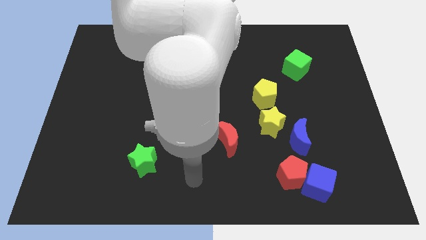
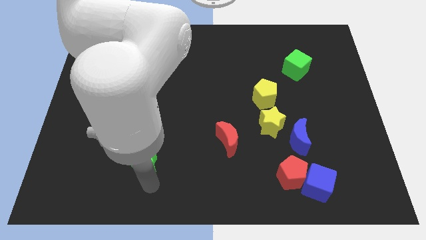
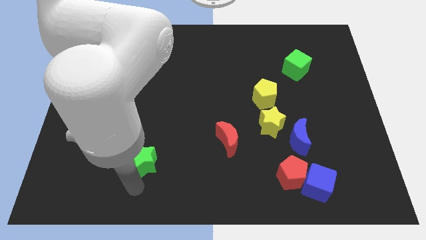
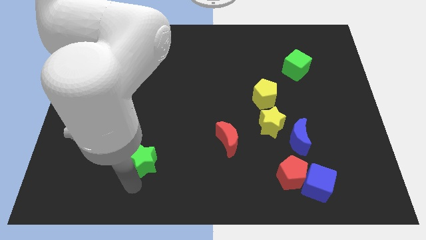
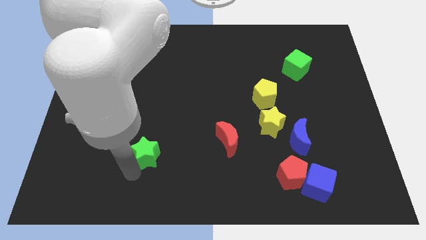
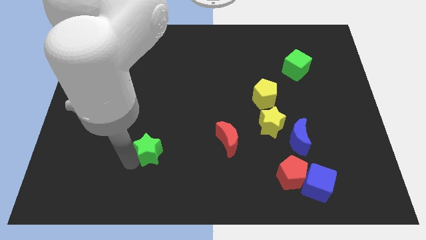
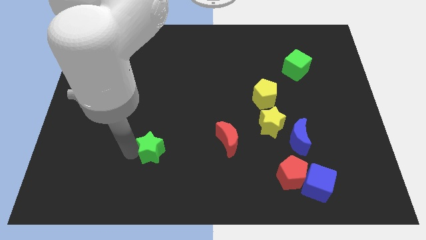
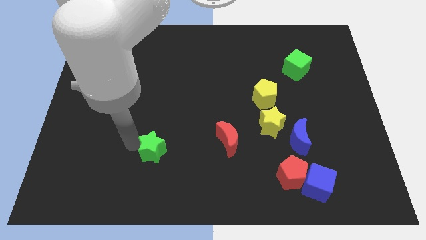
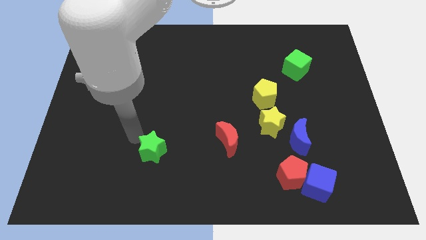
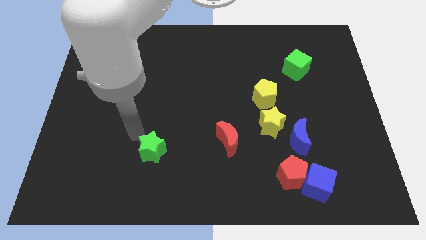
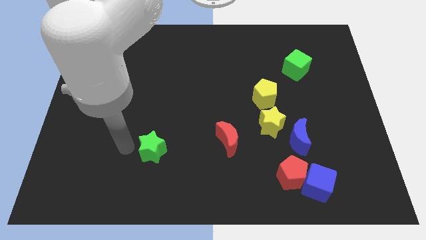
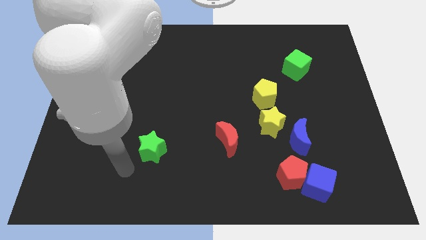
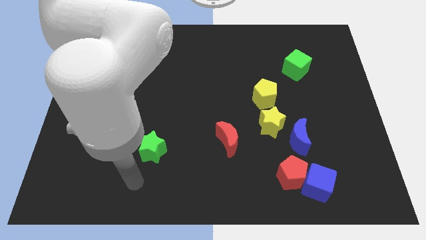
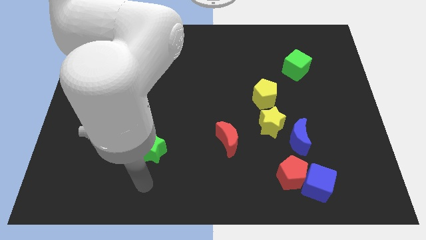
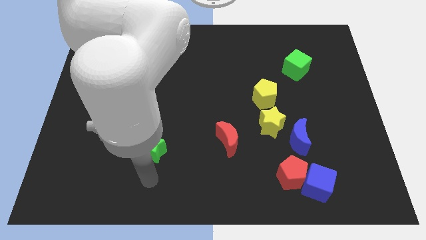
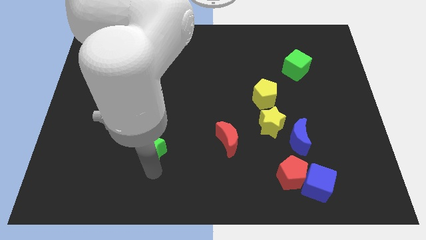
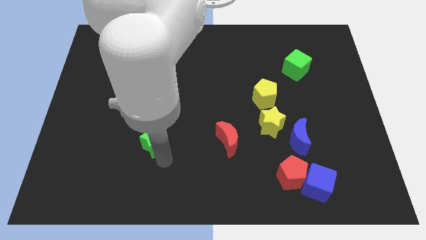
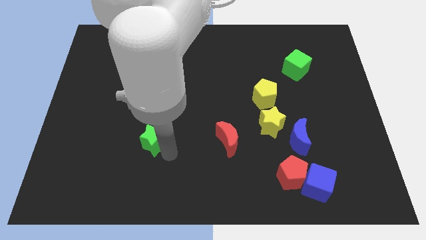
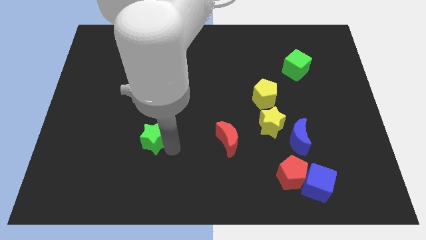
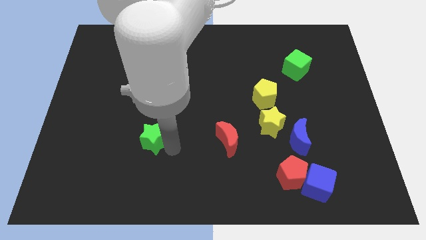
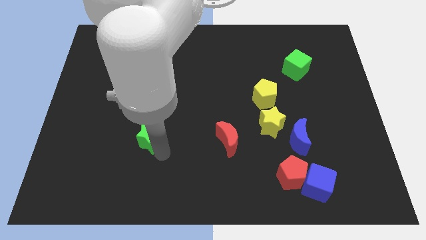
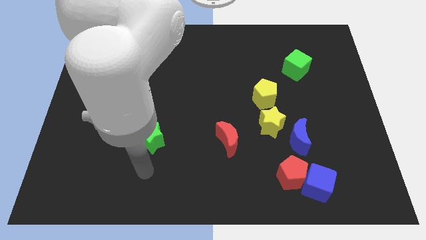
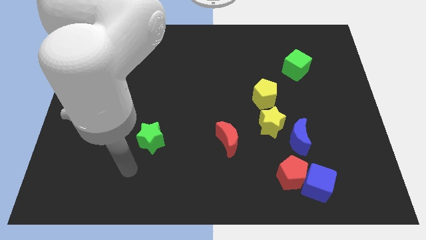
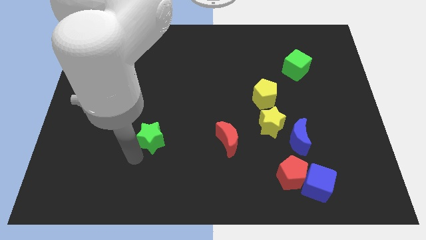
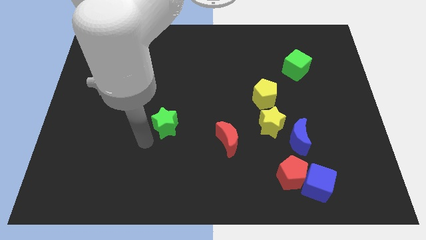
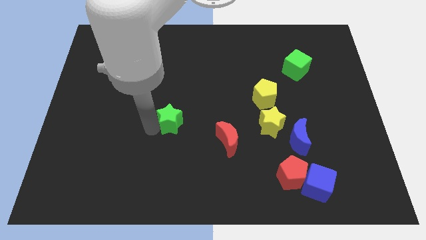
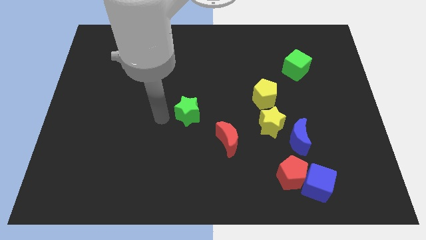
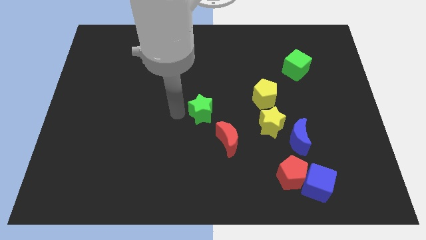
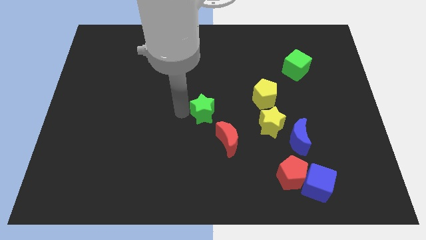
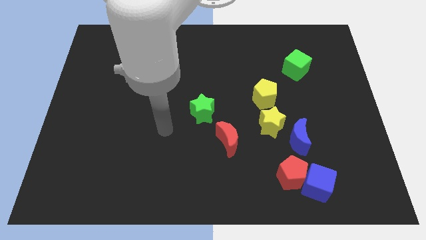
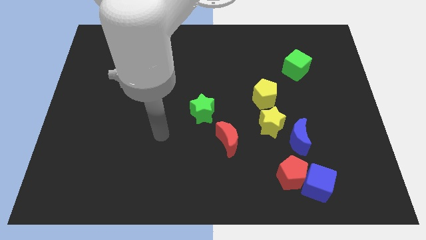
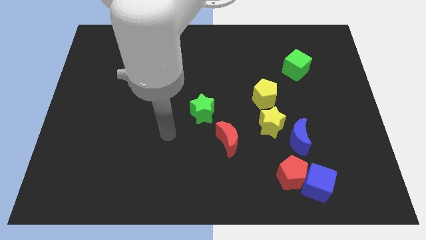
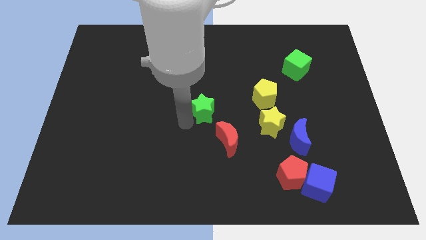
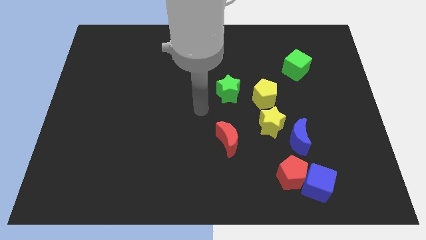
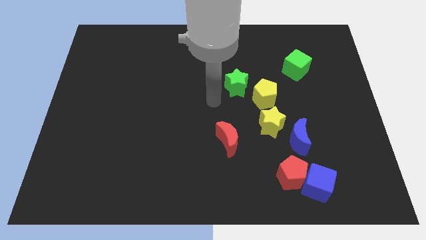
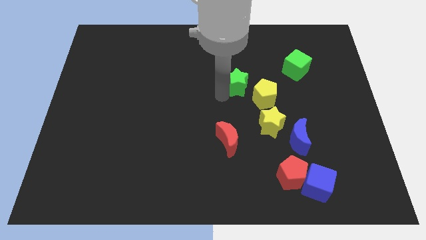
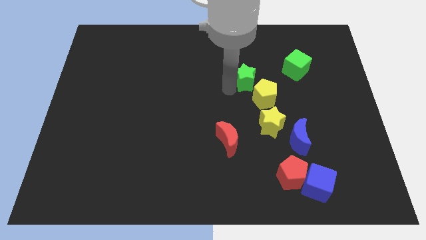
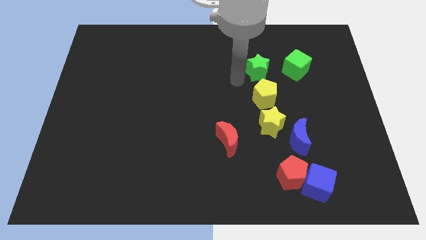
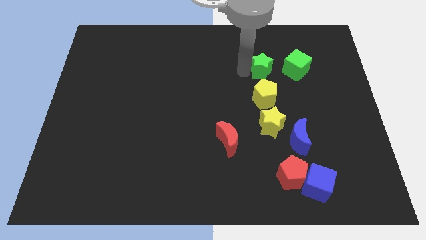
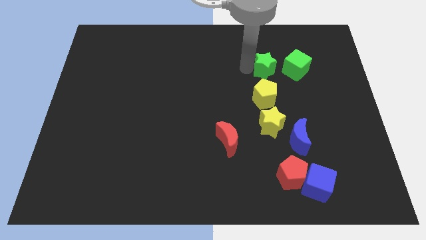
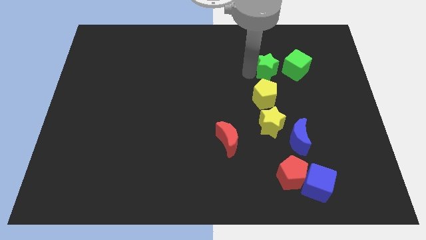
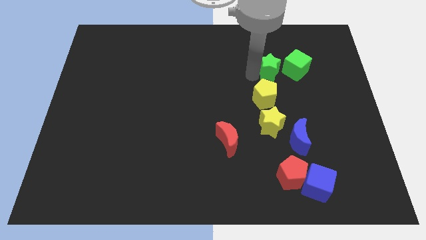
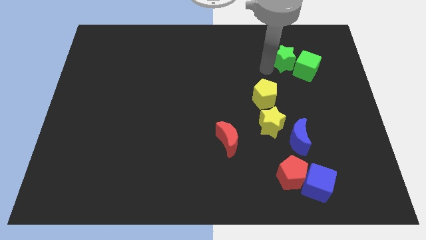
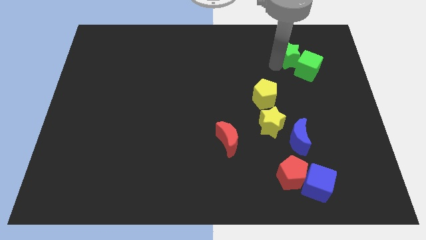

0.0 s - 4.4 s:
slide the green star close to the green cube

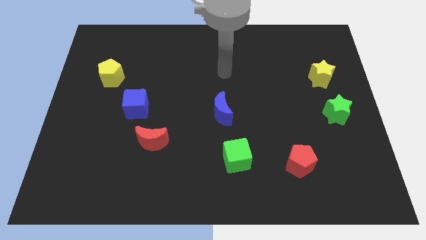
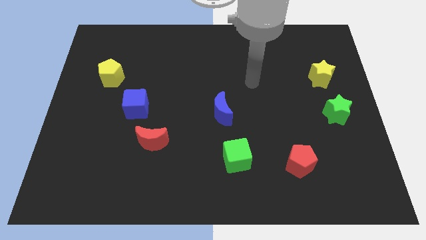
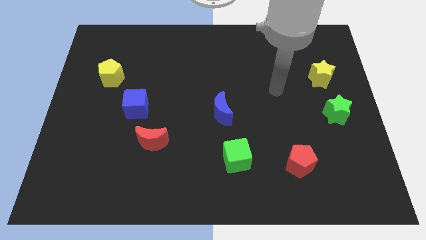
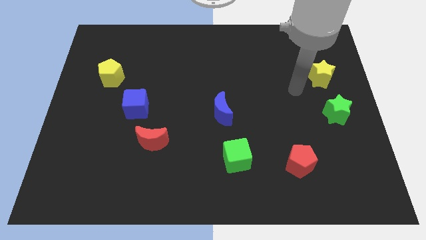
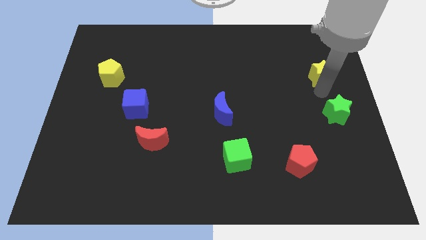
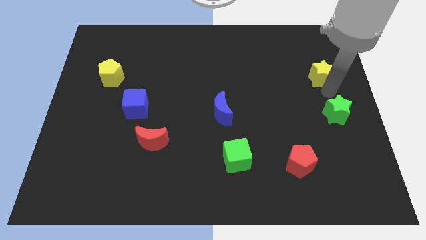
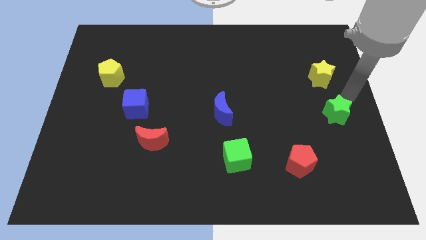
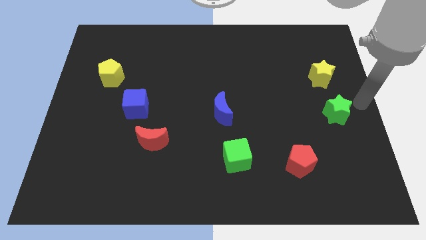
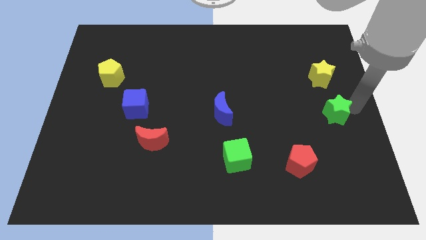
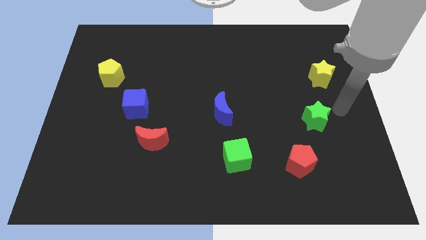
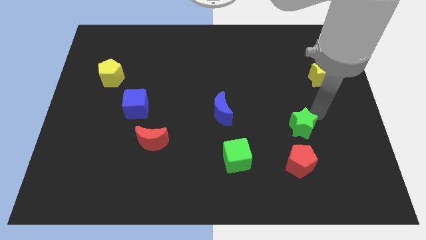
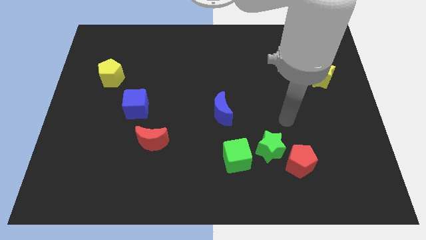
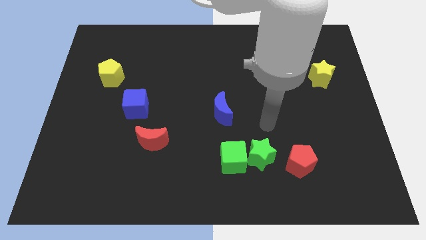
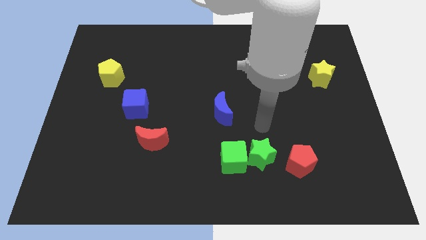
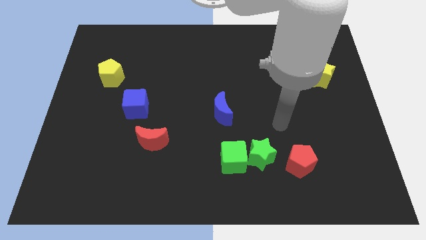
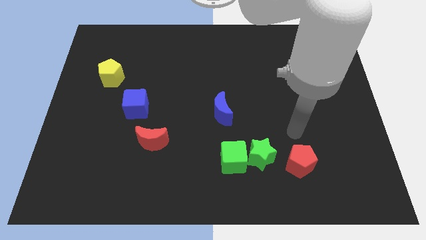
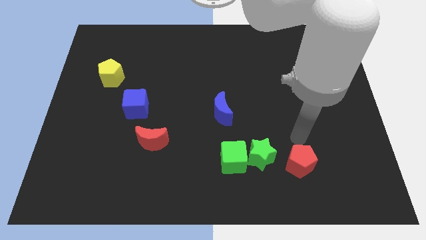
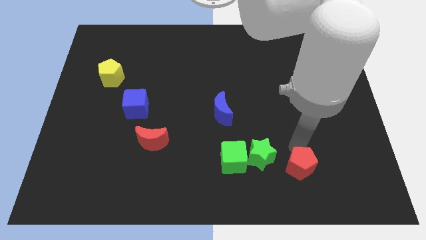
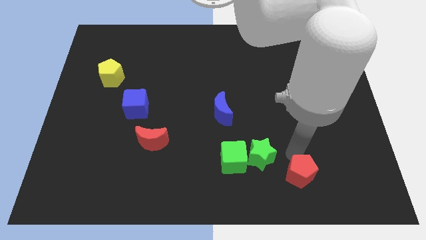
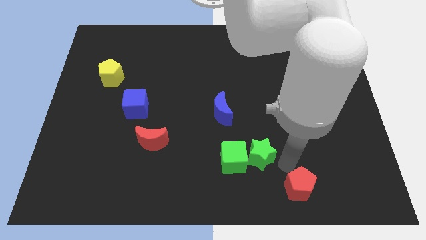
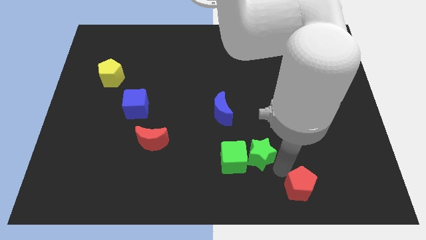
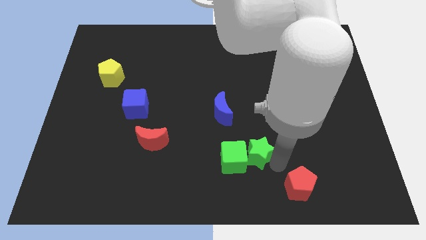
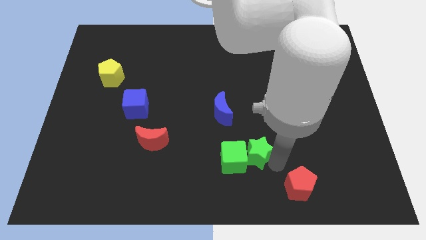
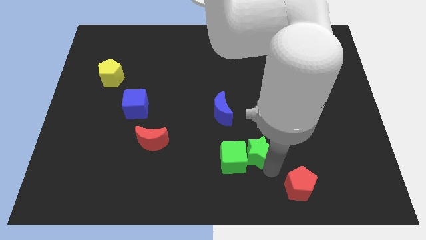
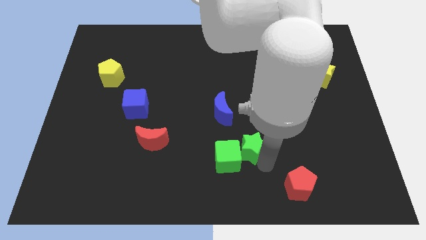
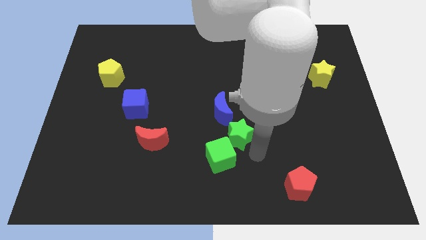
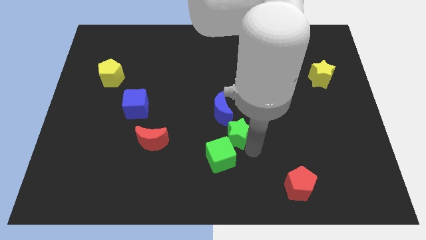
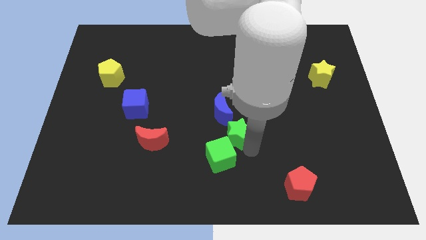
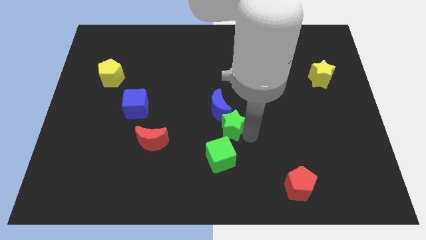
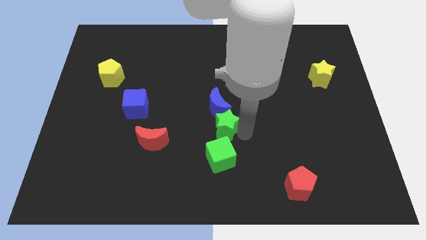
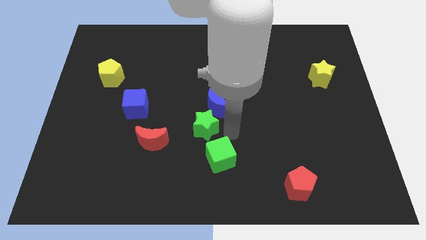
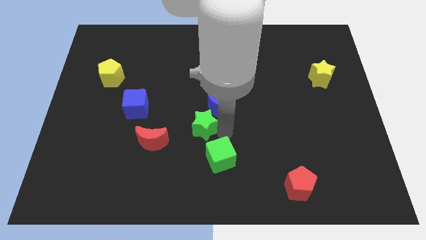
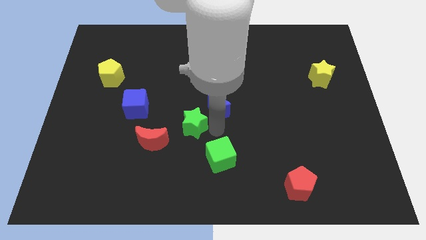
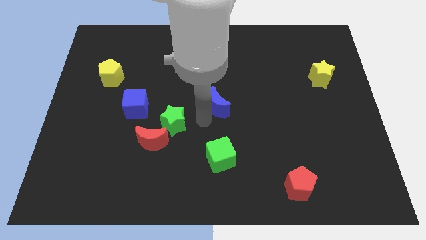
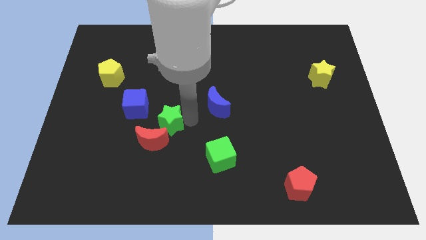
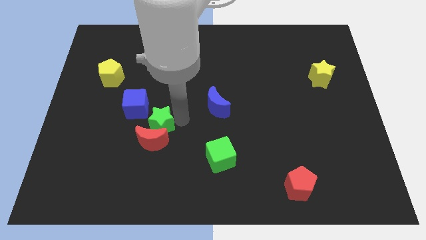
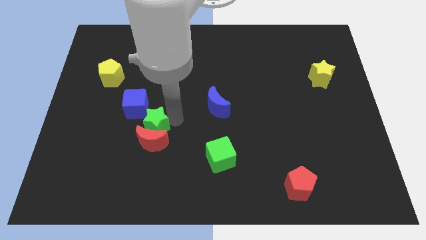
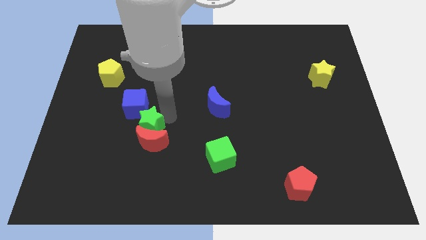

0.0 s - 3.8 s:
push the green star to the red moon

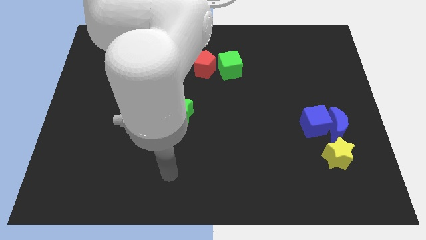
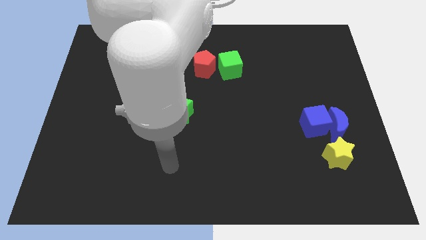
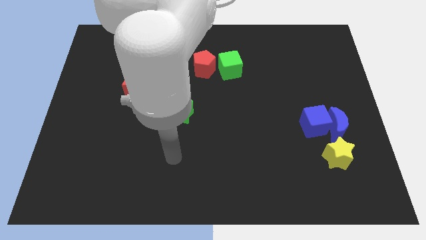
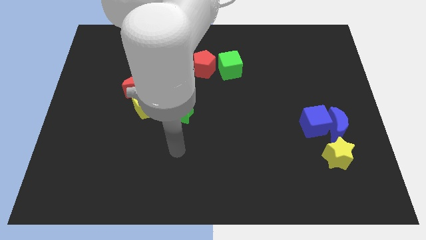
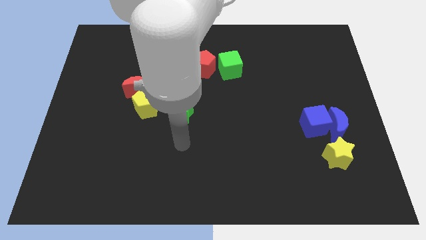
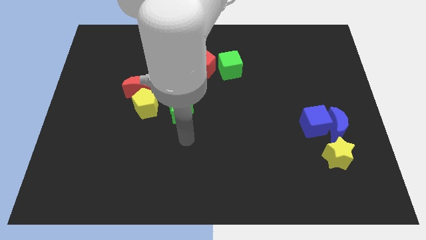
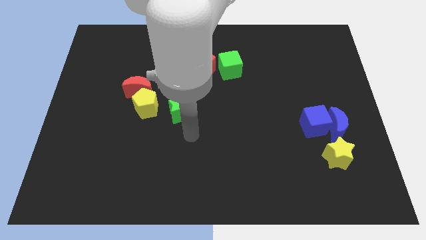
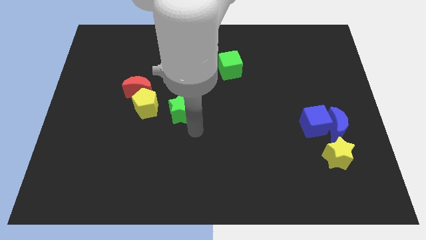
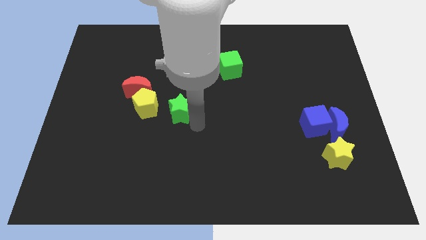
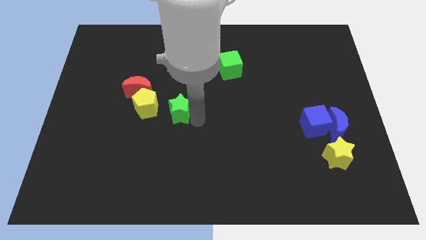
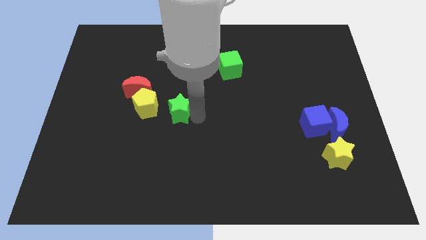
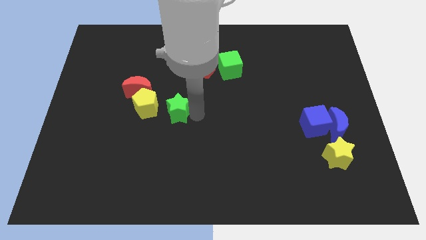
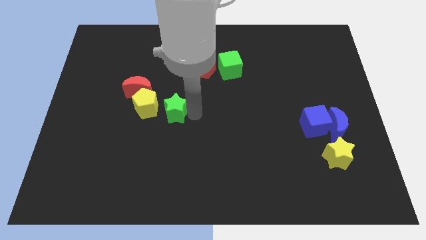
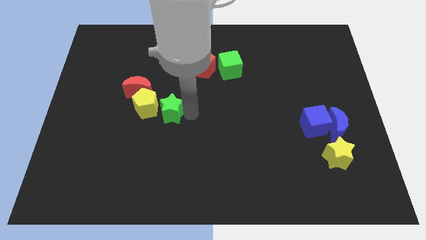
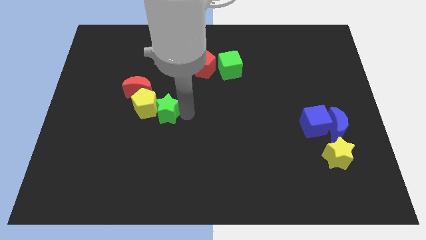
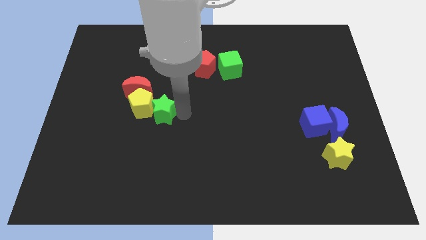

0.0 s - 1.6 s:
move the green star to the yellow pentagon
